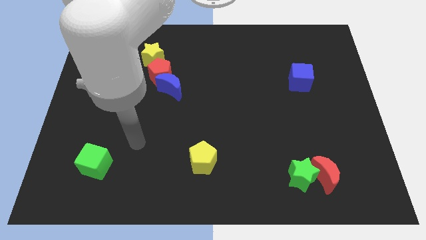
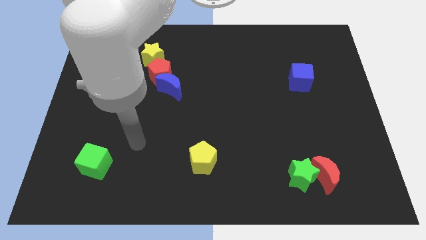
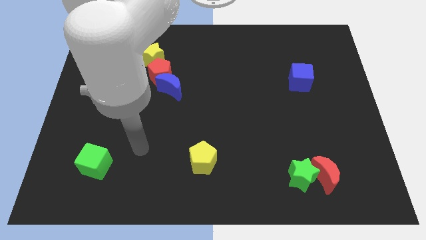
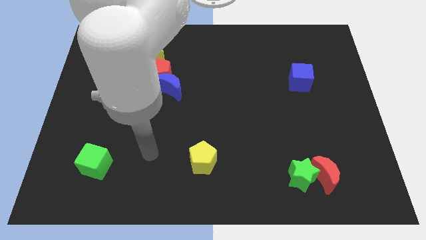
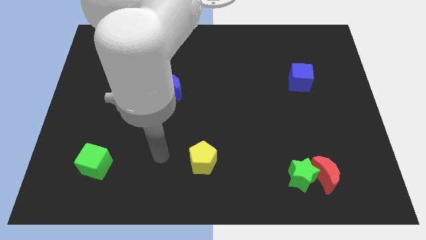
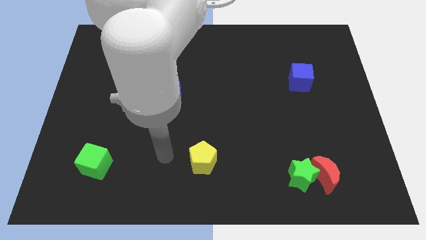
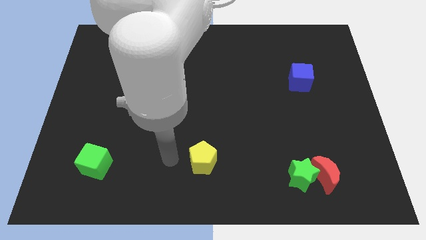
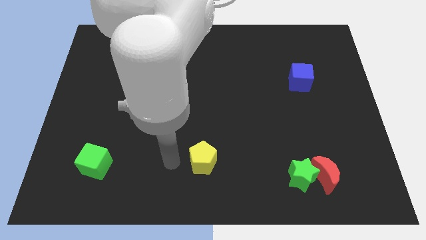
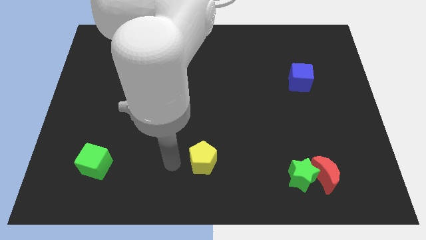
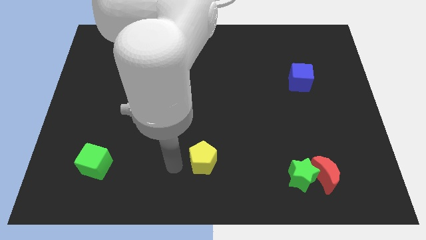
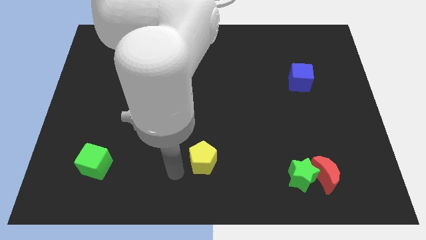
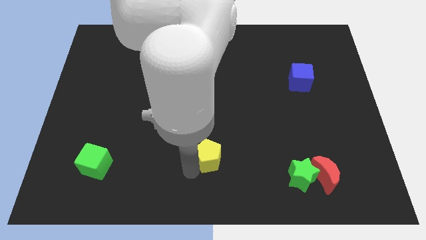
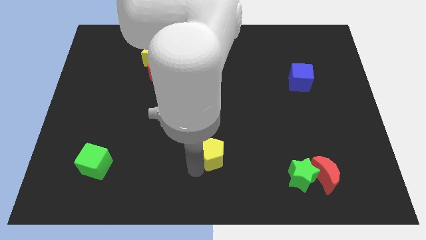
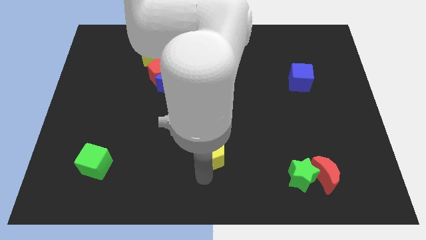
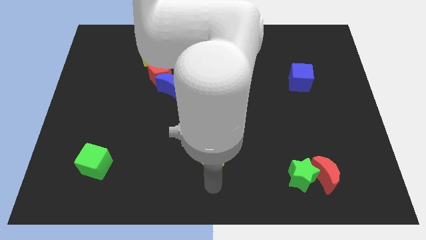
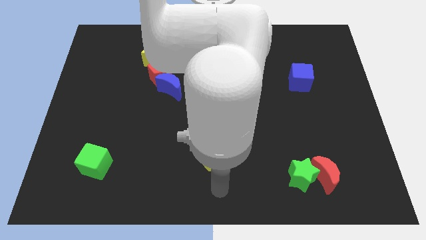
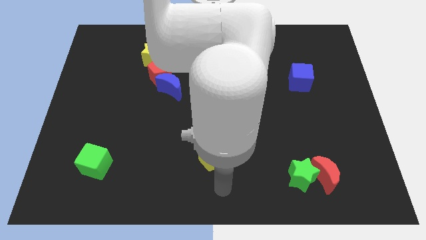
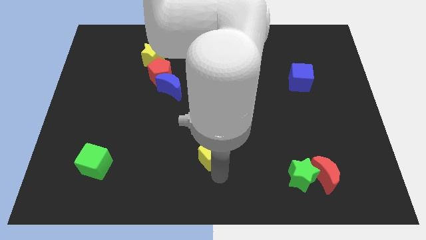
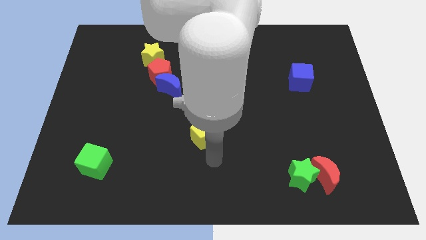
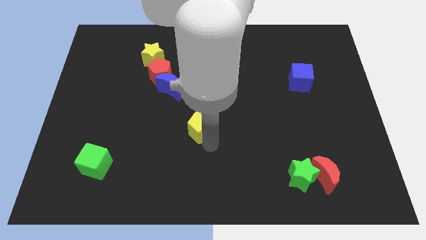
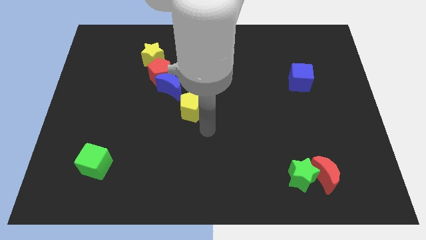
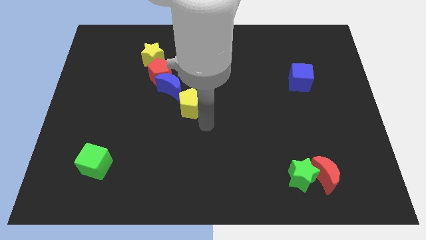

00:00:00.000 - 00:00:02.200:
push the yellow pentagon towards the blue moon

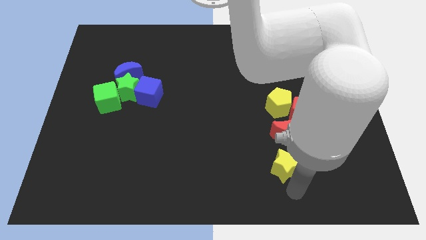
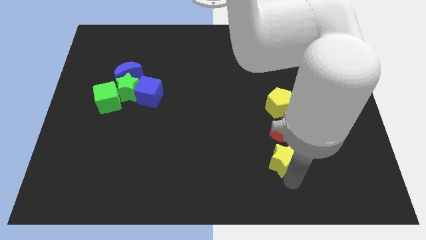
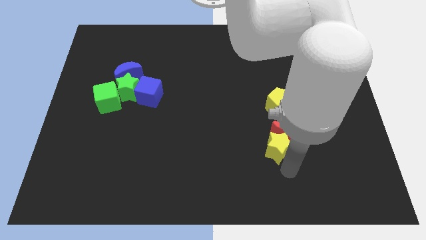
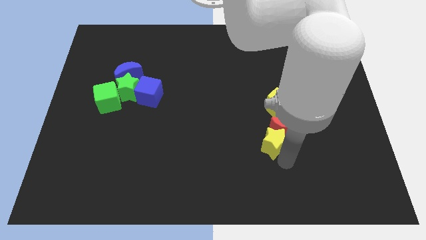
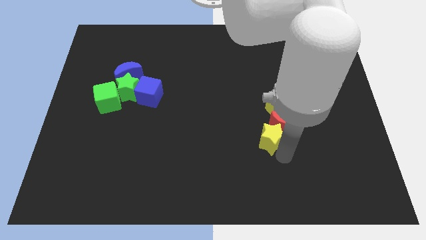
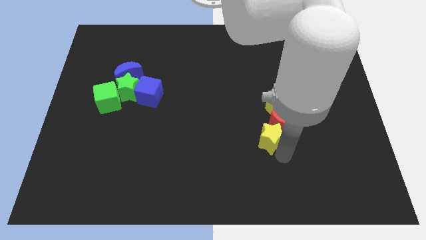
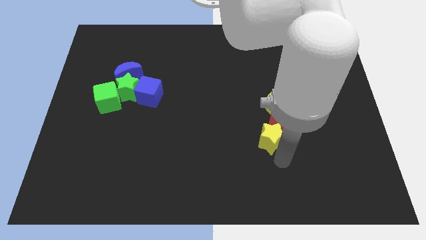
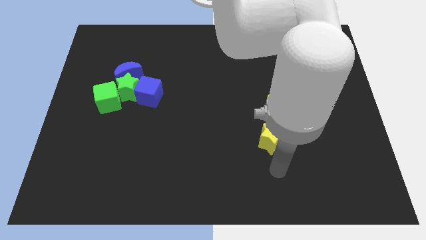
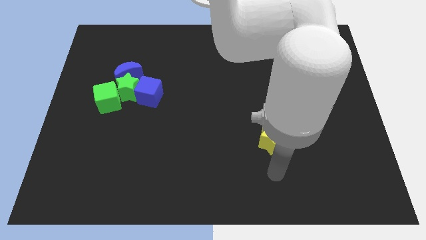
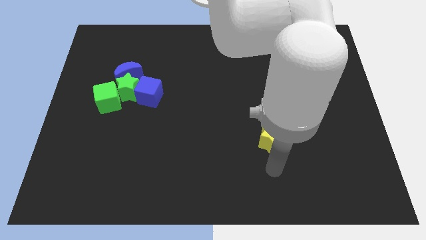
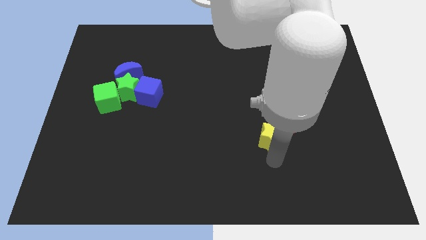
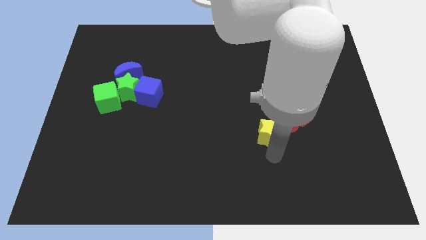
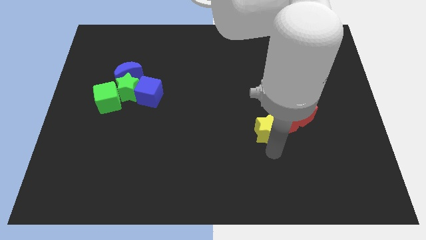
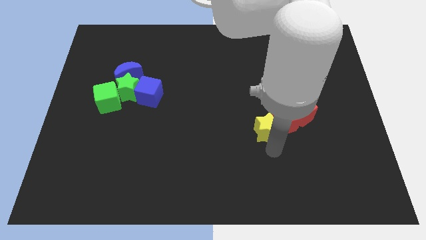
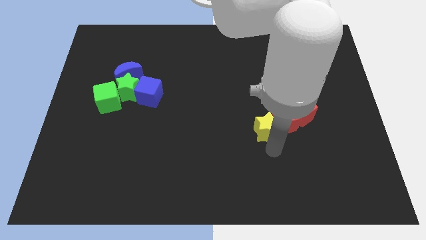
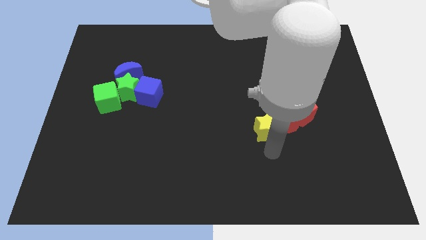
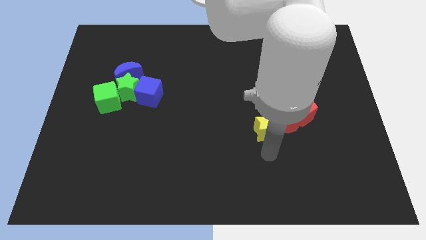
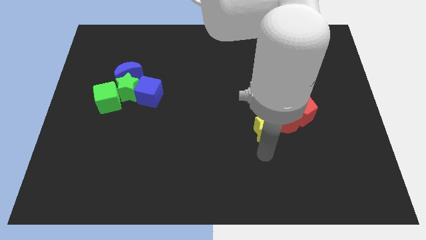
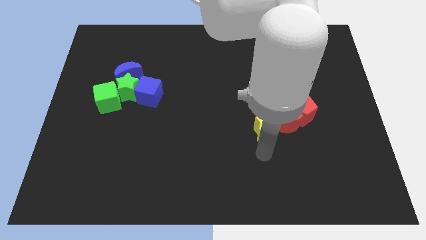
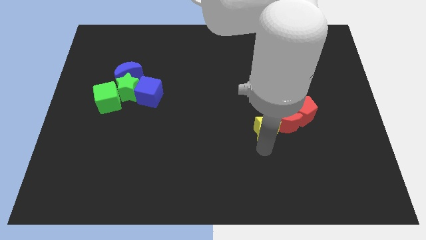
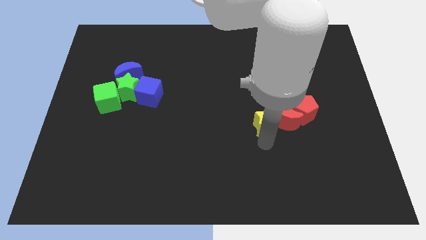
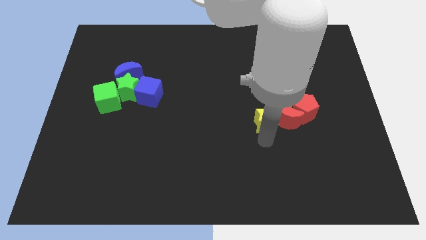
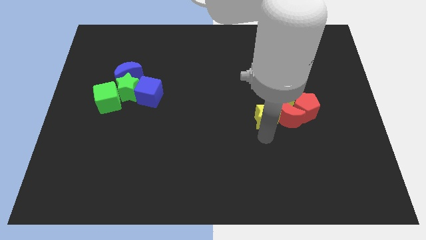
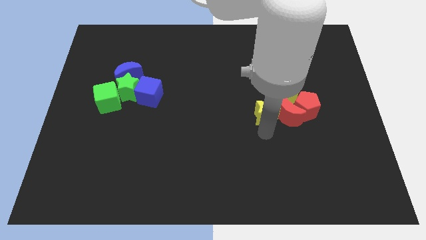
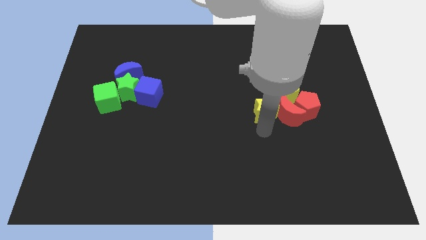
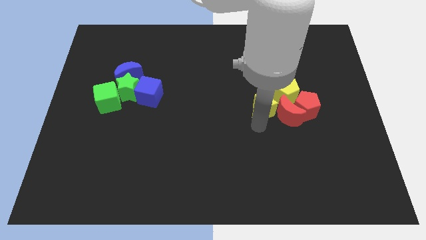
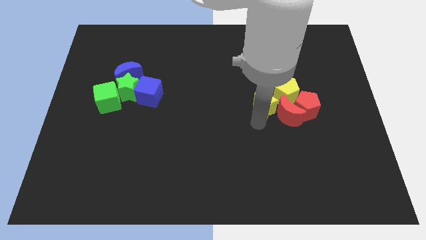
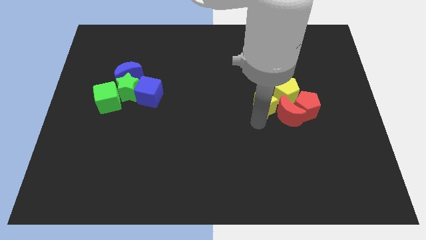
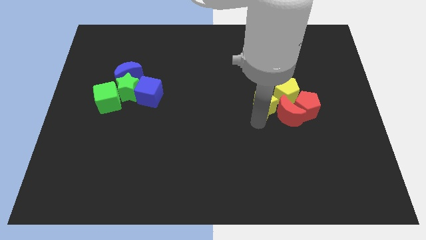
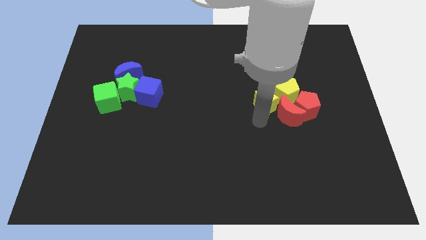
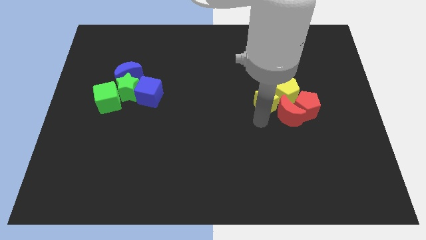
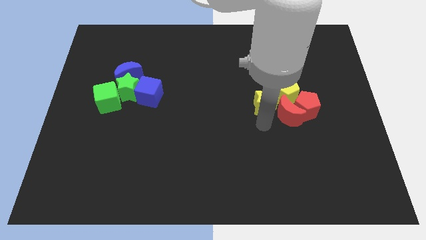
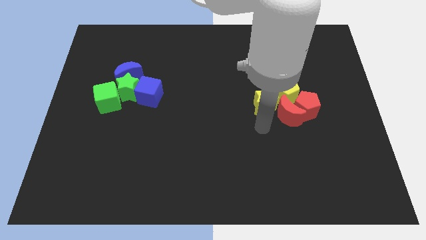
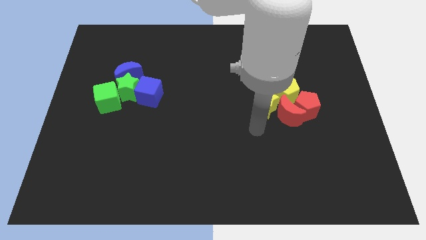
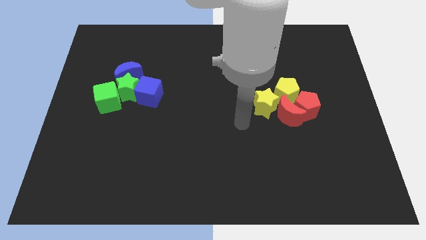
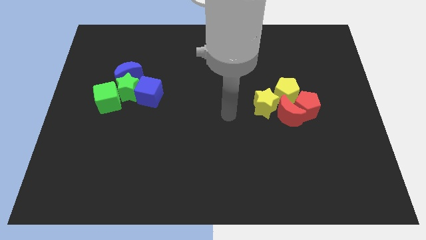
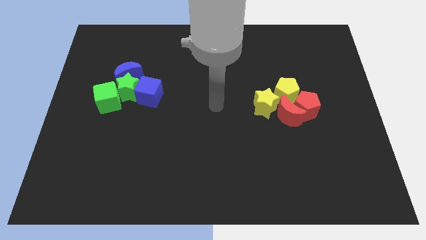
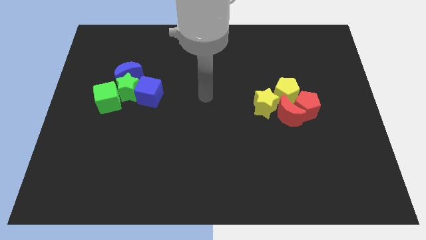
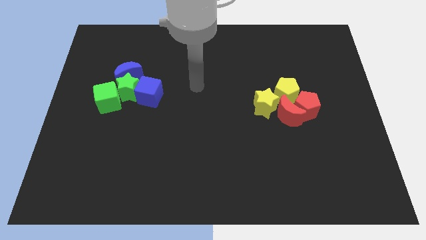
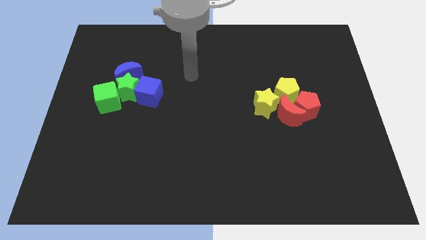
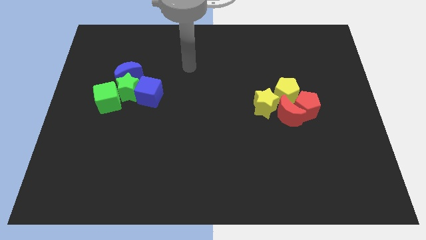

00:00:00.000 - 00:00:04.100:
push the yellow star to the left of the red crescent

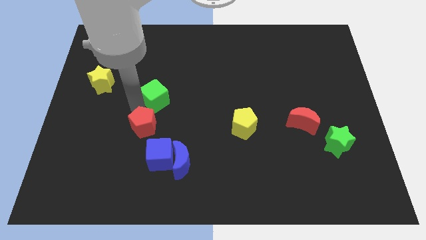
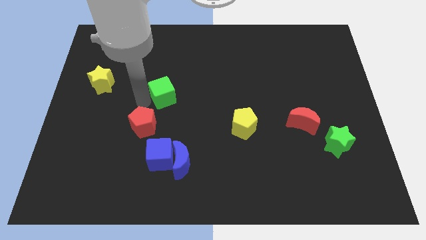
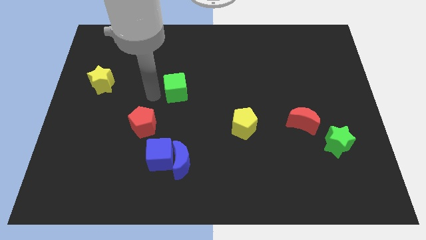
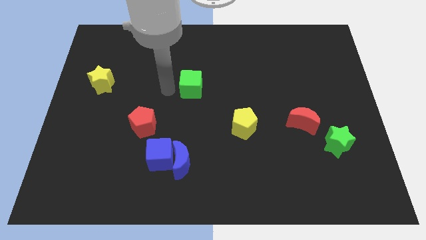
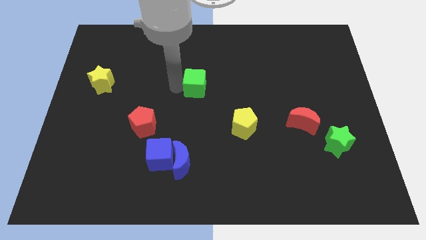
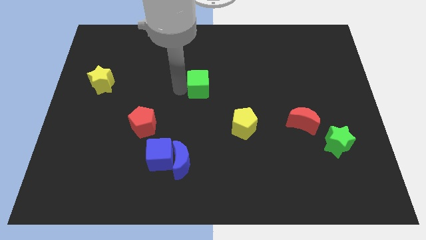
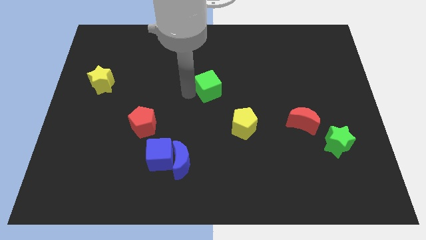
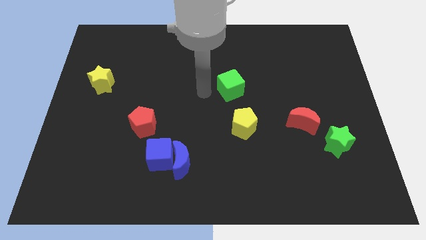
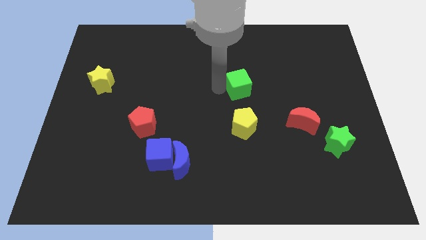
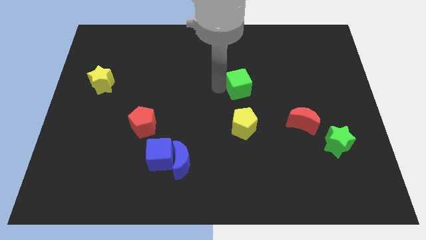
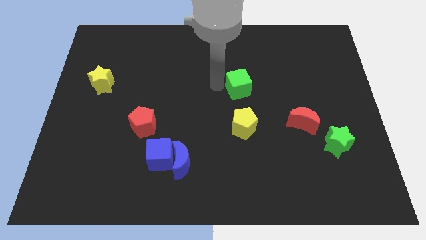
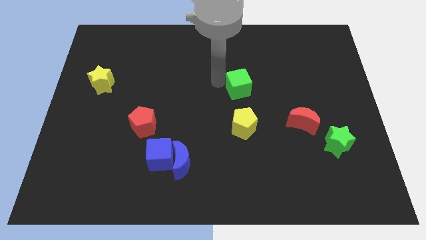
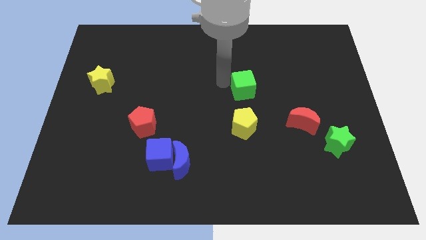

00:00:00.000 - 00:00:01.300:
put the green cube above the yellow pentagon

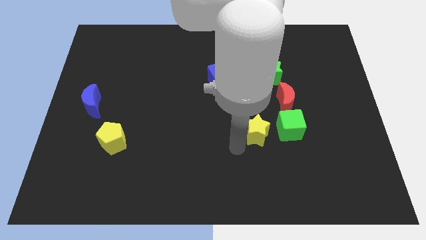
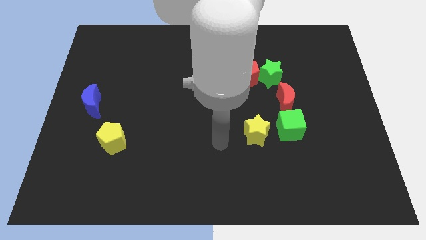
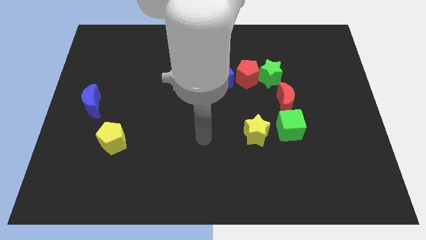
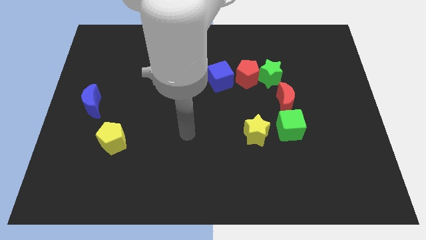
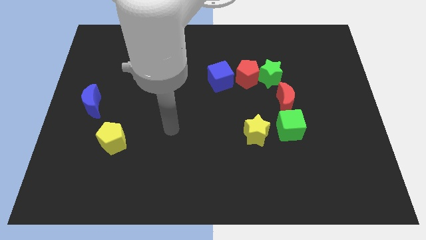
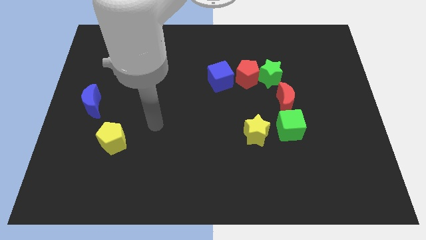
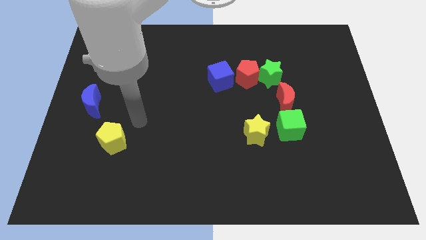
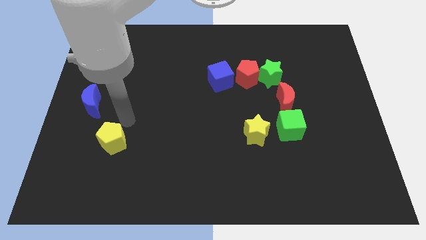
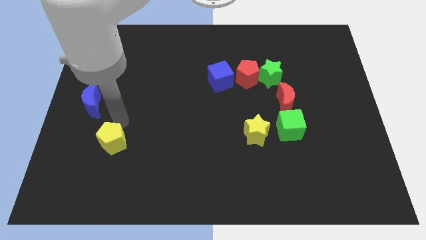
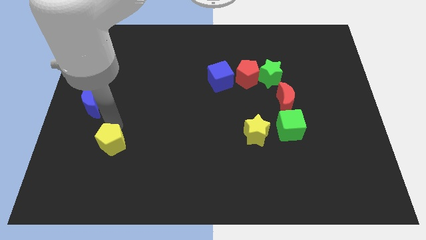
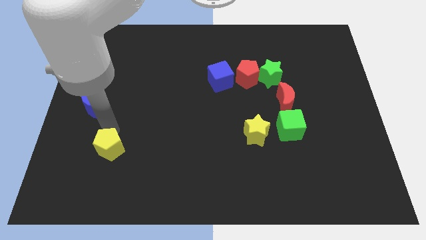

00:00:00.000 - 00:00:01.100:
move your hand towards the yellow pentagon

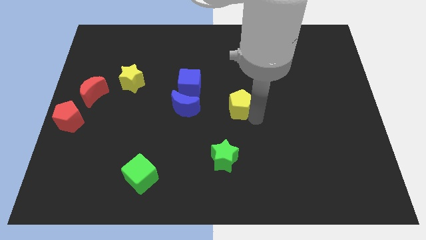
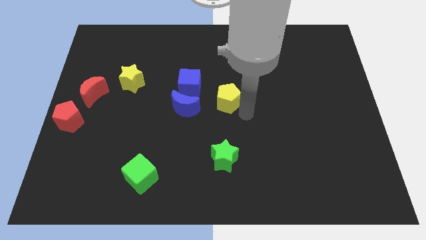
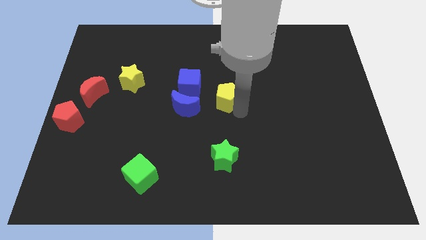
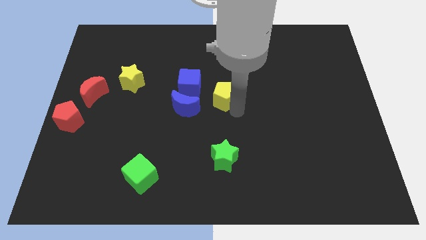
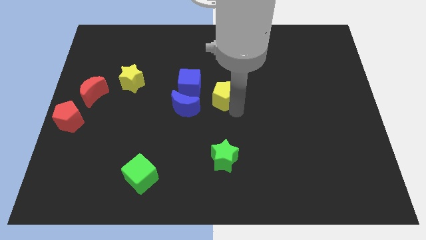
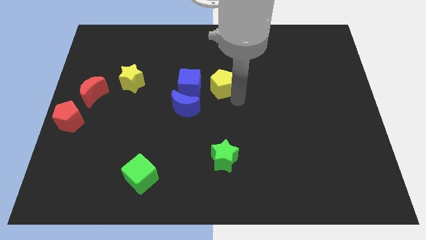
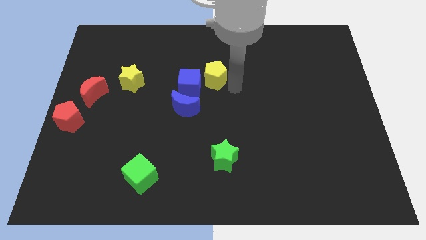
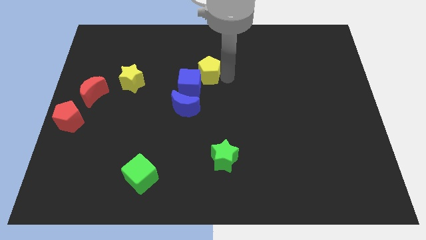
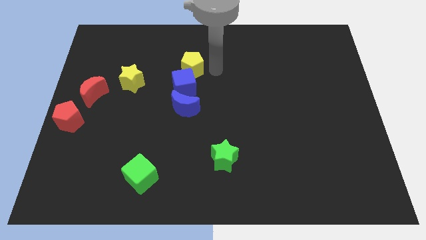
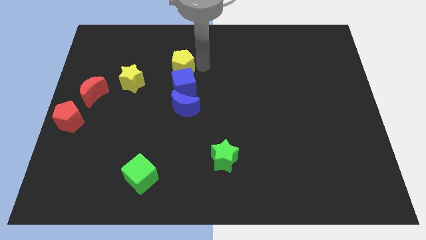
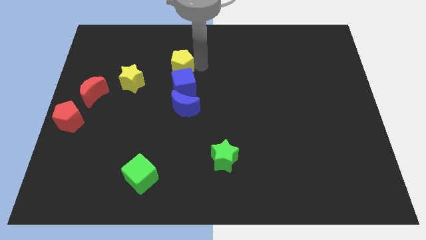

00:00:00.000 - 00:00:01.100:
push the yellow pentagon above the blue cube
